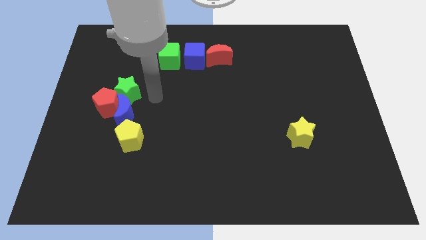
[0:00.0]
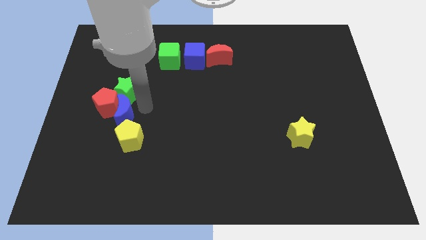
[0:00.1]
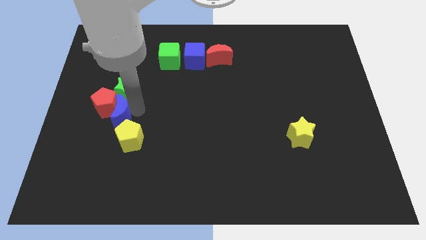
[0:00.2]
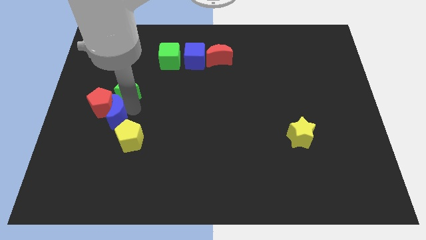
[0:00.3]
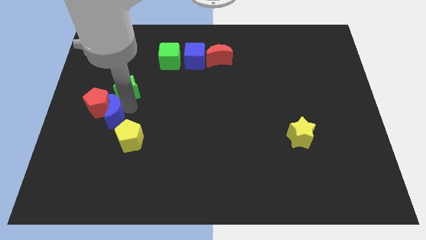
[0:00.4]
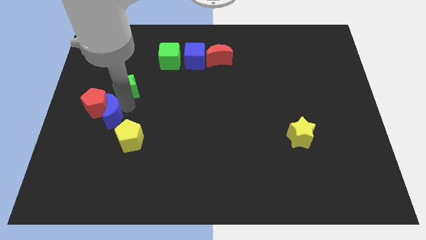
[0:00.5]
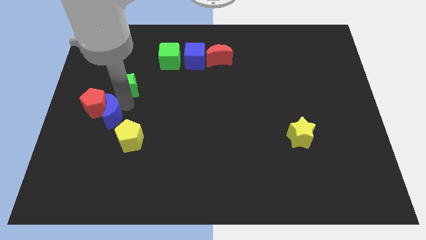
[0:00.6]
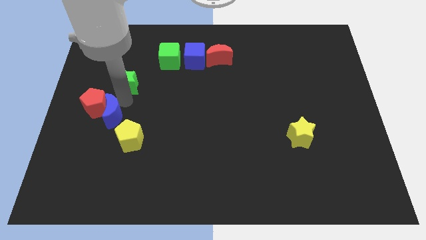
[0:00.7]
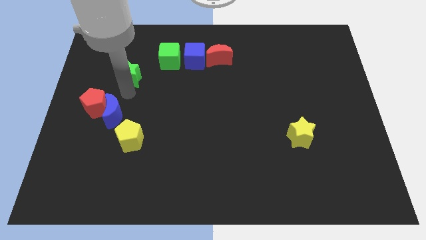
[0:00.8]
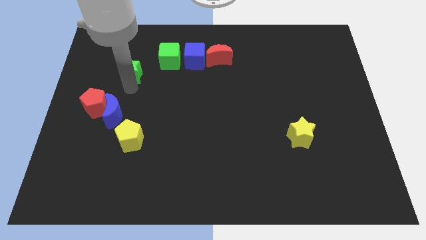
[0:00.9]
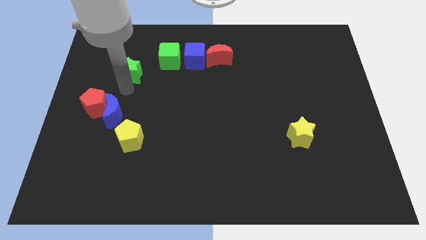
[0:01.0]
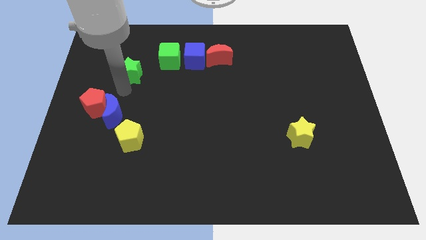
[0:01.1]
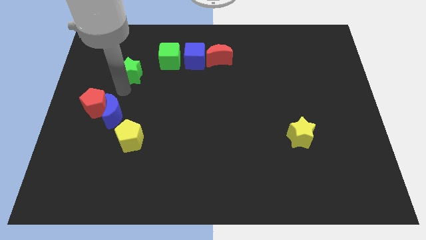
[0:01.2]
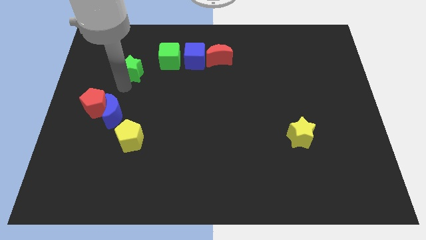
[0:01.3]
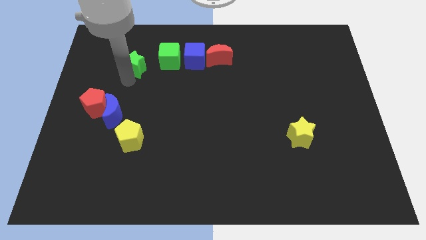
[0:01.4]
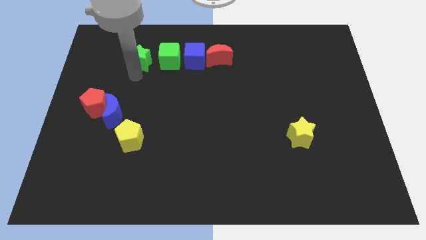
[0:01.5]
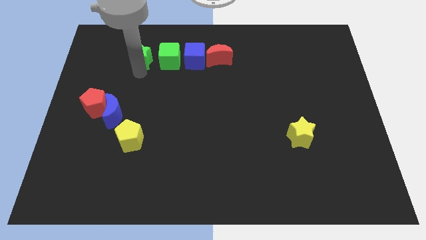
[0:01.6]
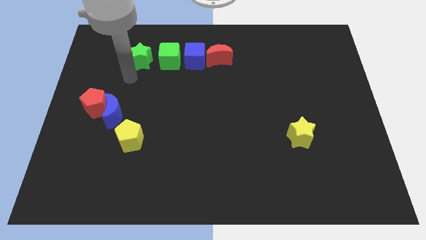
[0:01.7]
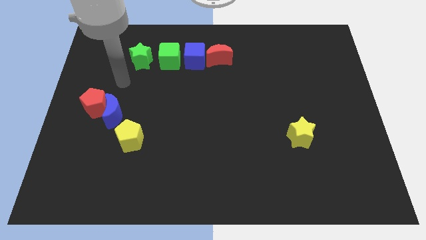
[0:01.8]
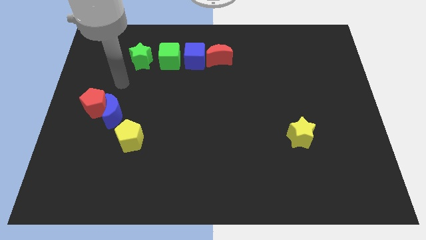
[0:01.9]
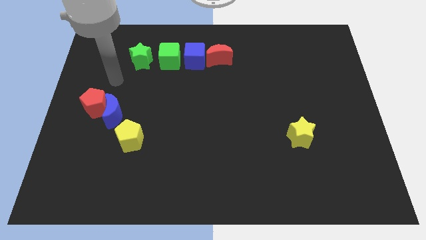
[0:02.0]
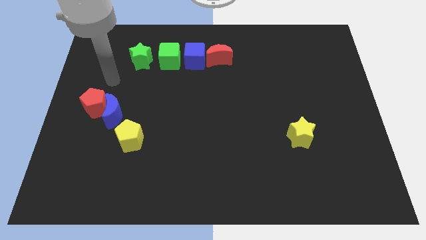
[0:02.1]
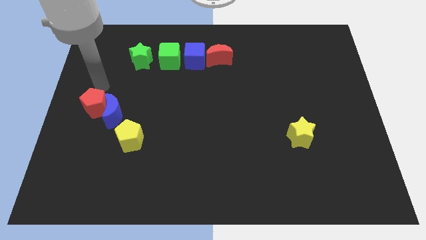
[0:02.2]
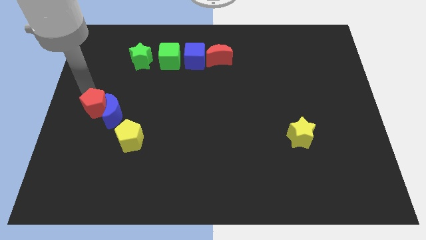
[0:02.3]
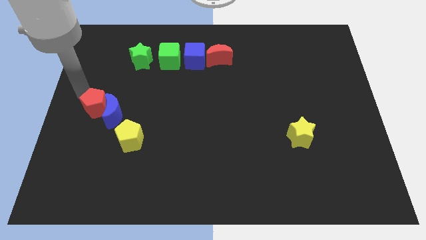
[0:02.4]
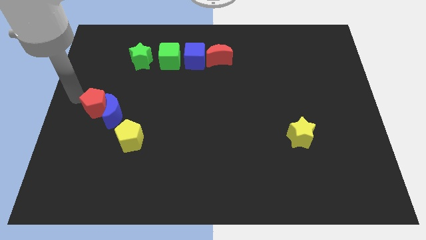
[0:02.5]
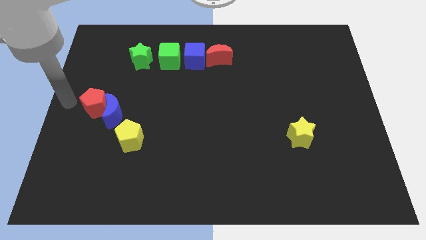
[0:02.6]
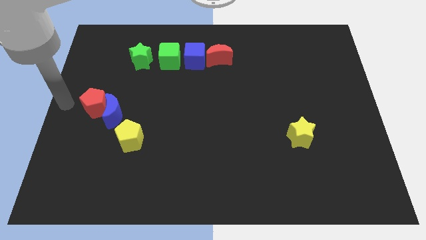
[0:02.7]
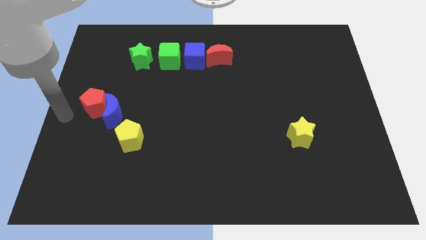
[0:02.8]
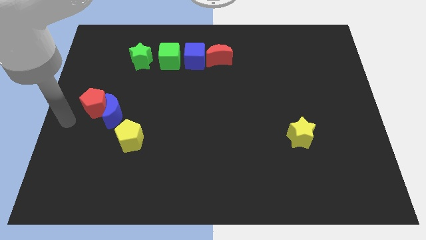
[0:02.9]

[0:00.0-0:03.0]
move the green star at the left side of the green cube

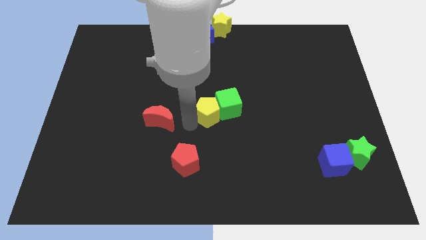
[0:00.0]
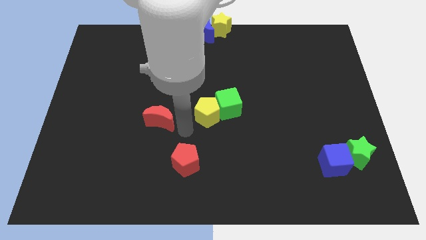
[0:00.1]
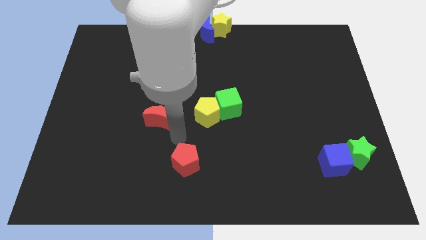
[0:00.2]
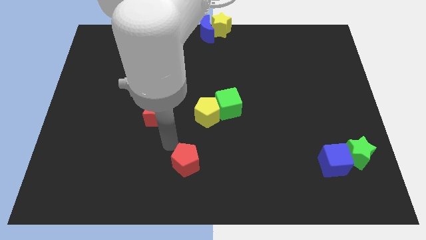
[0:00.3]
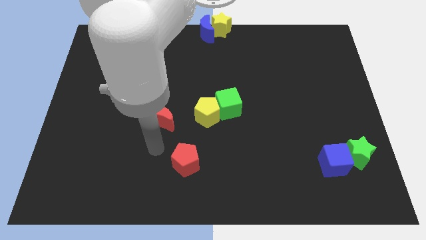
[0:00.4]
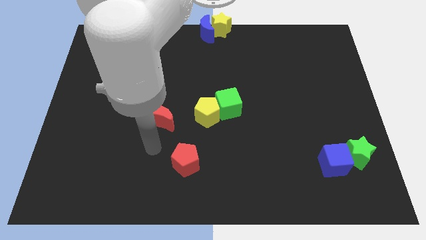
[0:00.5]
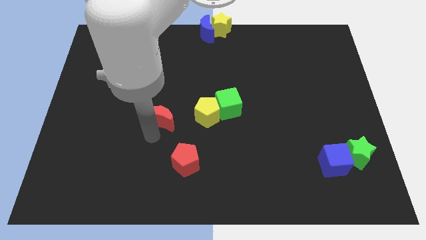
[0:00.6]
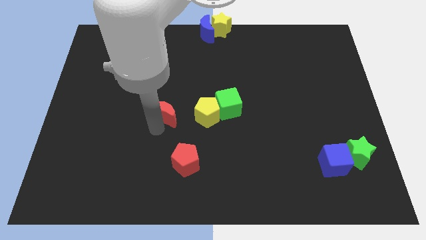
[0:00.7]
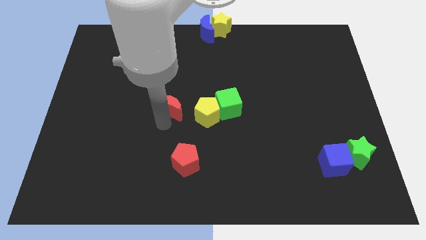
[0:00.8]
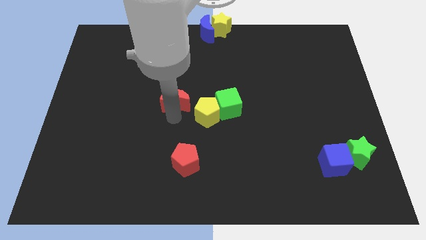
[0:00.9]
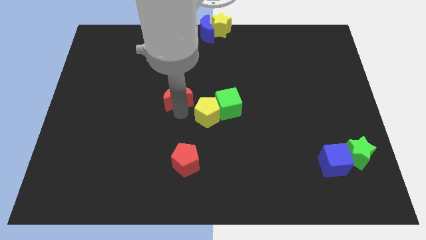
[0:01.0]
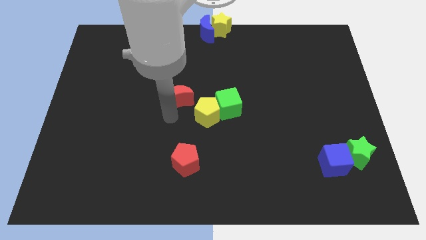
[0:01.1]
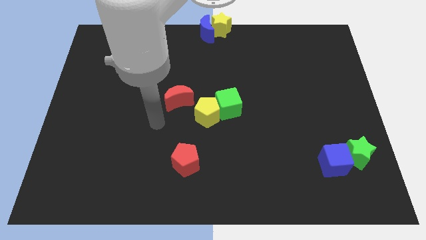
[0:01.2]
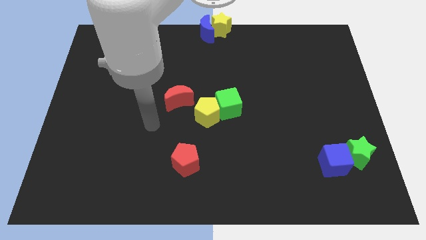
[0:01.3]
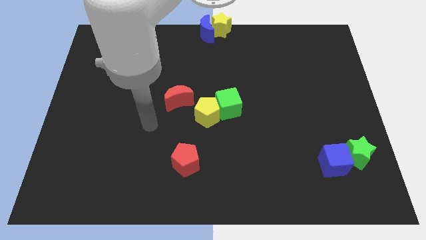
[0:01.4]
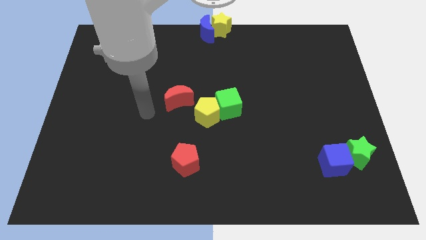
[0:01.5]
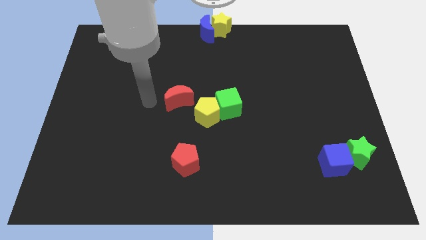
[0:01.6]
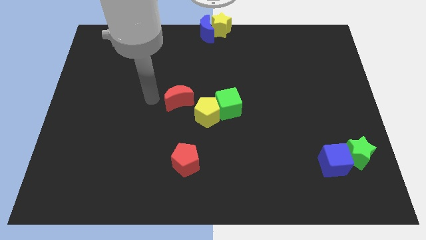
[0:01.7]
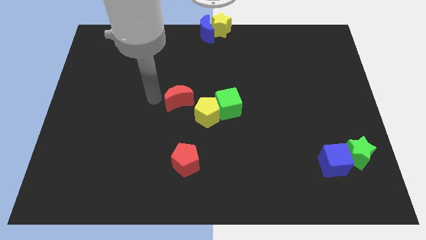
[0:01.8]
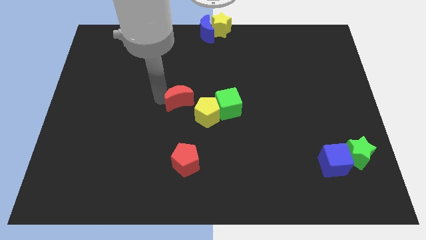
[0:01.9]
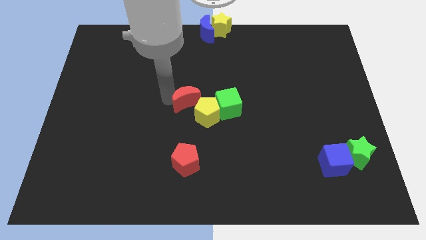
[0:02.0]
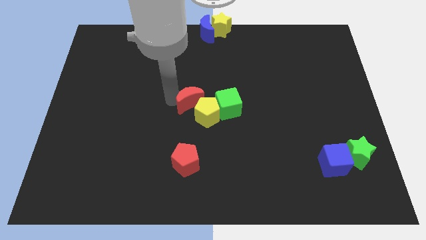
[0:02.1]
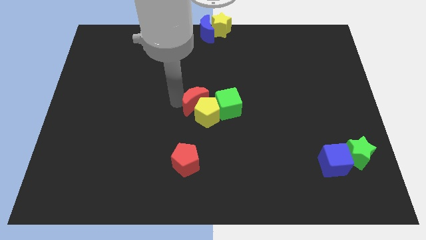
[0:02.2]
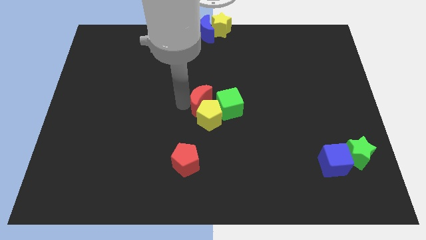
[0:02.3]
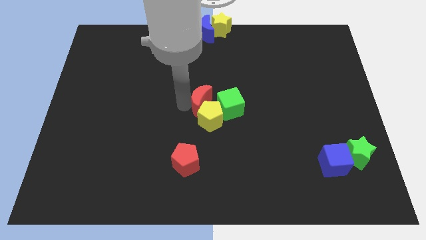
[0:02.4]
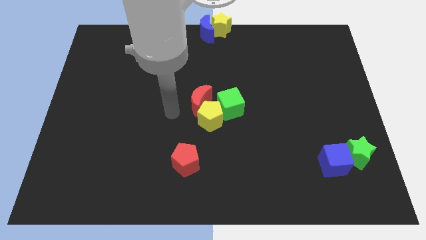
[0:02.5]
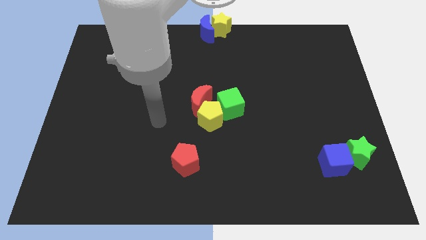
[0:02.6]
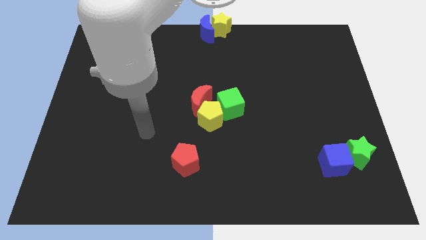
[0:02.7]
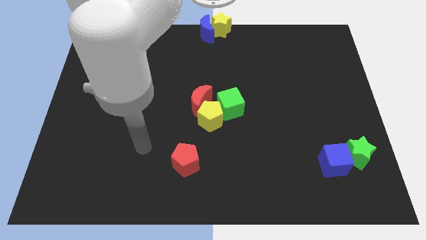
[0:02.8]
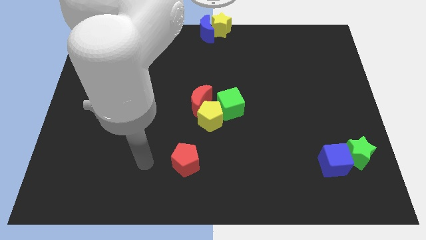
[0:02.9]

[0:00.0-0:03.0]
place the red moon above the yellow pentagon

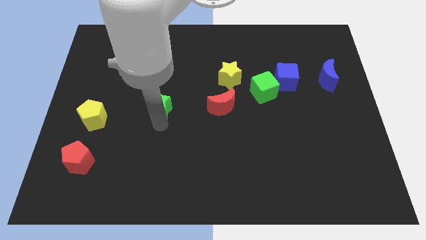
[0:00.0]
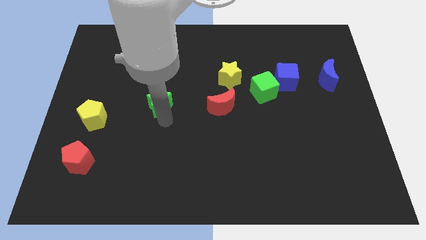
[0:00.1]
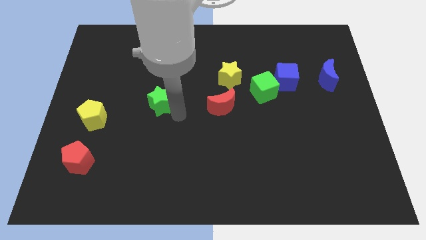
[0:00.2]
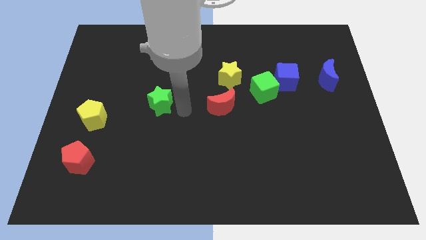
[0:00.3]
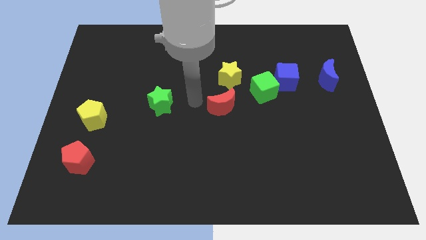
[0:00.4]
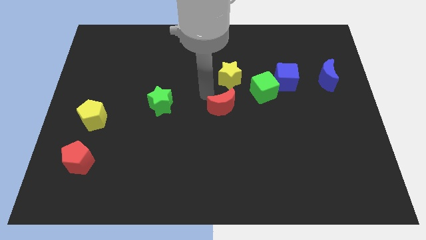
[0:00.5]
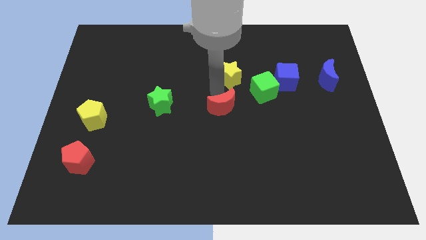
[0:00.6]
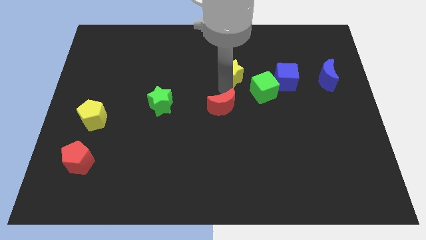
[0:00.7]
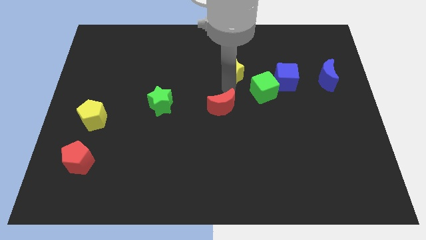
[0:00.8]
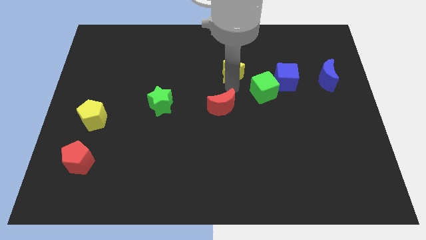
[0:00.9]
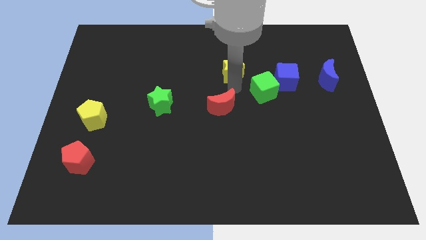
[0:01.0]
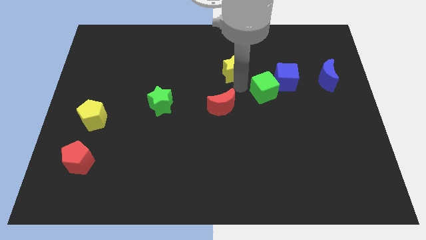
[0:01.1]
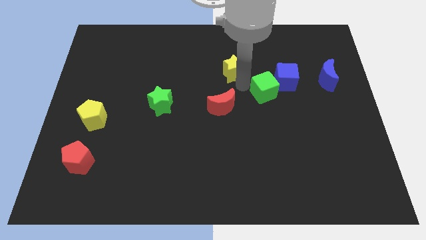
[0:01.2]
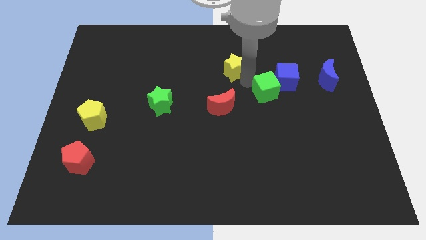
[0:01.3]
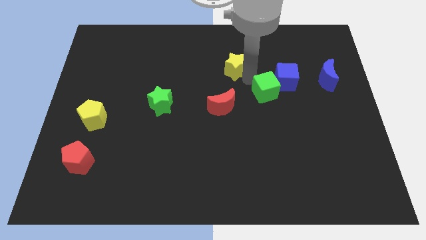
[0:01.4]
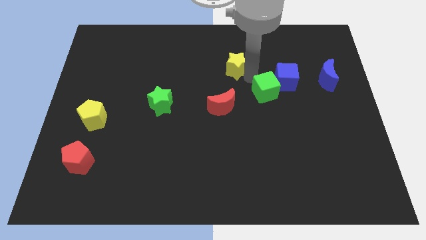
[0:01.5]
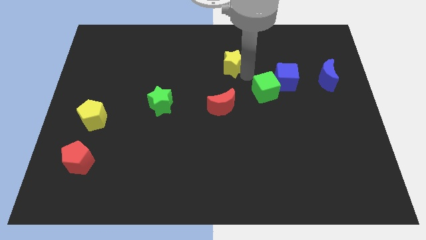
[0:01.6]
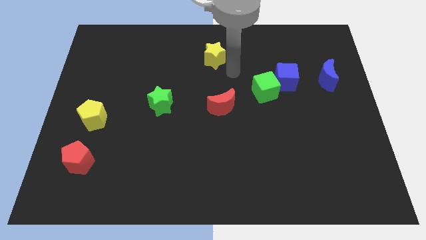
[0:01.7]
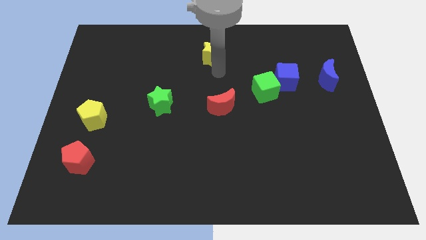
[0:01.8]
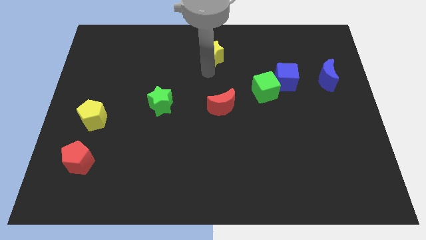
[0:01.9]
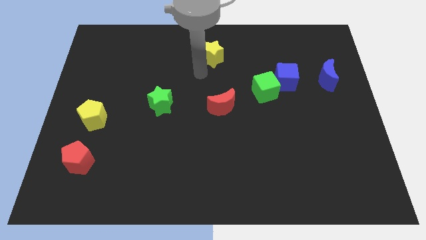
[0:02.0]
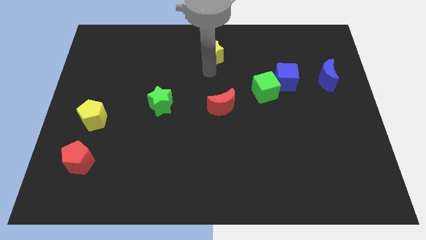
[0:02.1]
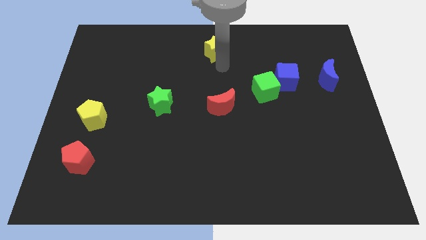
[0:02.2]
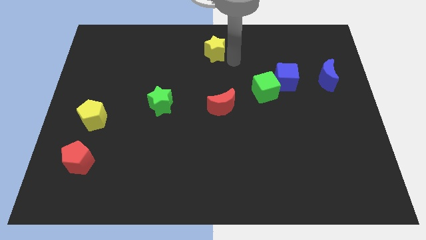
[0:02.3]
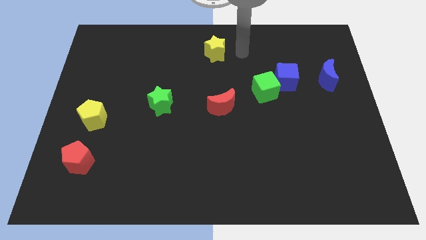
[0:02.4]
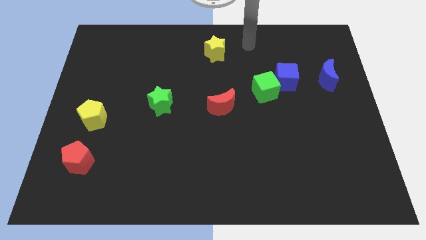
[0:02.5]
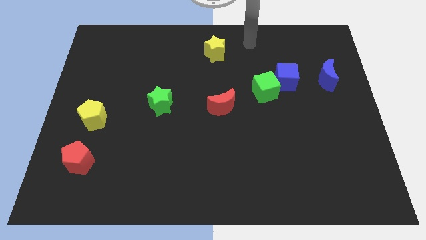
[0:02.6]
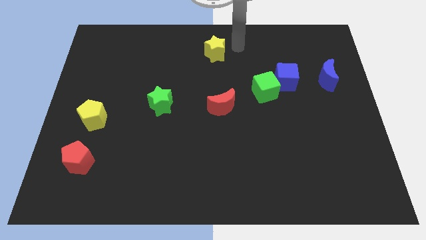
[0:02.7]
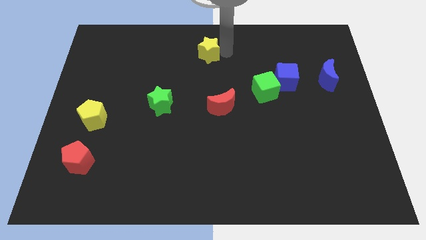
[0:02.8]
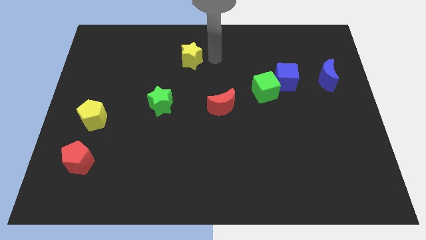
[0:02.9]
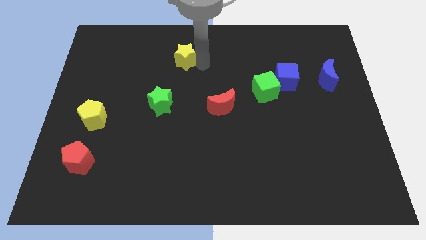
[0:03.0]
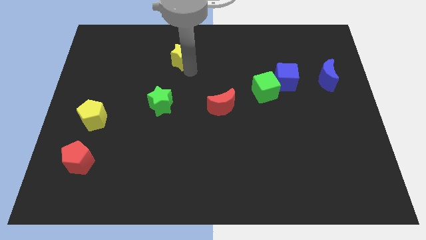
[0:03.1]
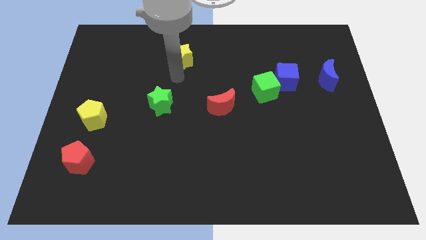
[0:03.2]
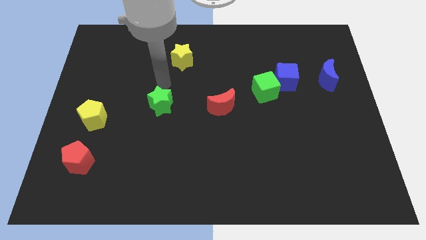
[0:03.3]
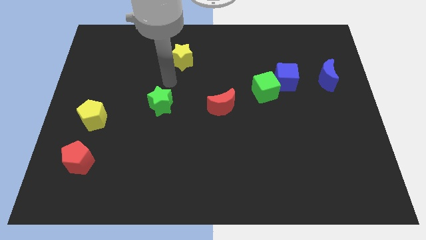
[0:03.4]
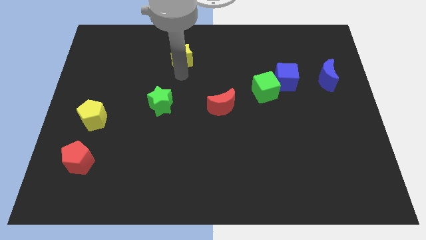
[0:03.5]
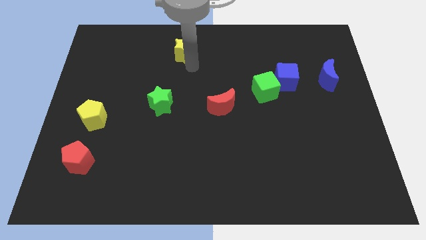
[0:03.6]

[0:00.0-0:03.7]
place the yellow star diagonally top right to the green star
